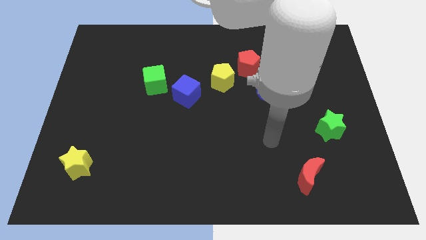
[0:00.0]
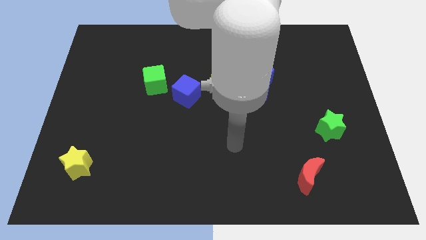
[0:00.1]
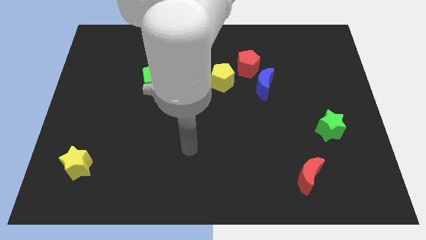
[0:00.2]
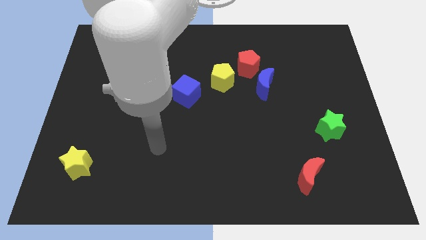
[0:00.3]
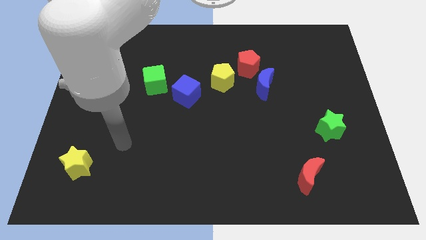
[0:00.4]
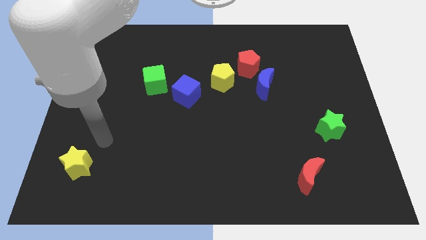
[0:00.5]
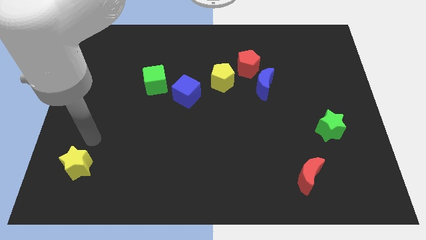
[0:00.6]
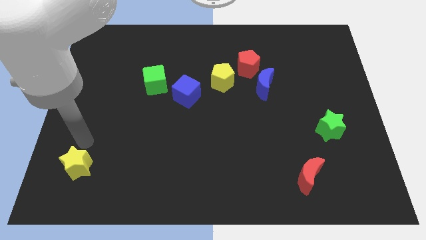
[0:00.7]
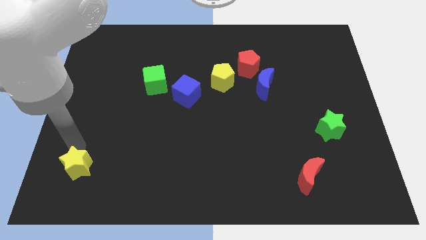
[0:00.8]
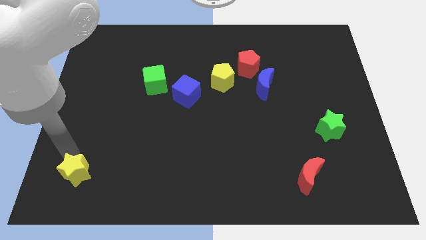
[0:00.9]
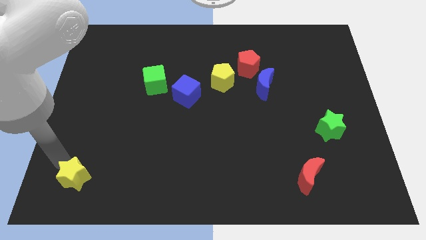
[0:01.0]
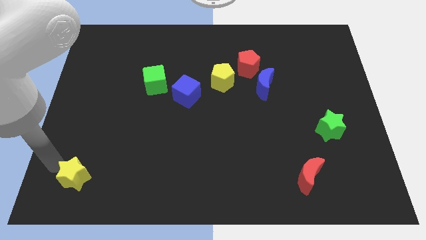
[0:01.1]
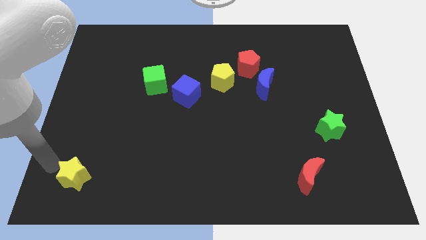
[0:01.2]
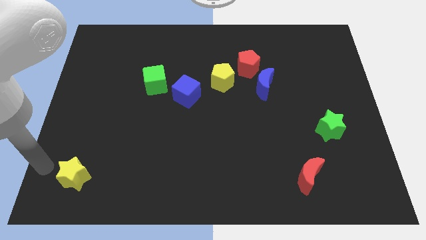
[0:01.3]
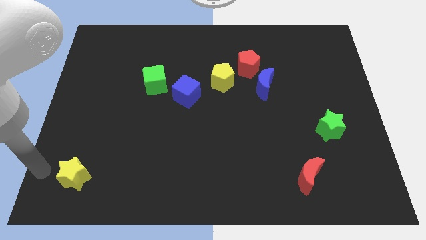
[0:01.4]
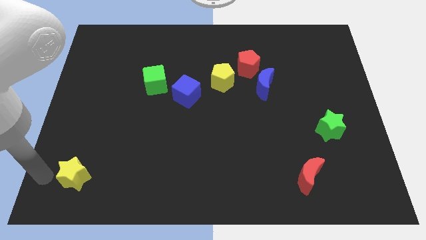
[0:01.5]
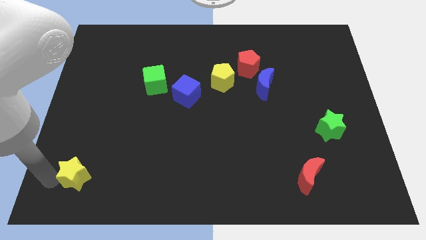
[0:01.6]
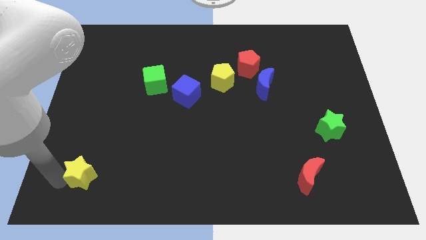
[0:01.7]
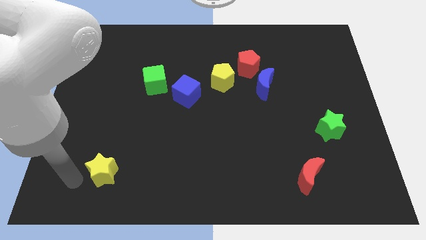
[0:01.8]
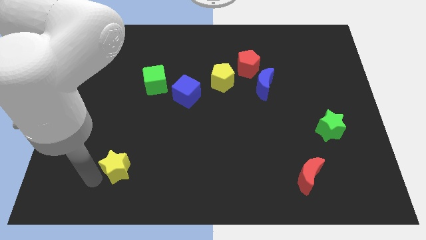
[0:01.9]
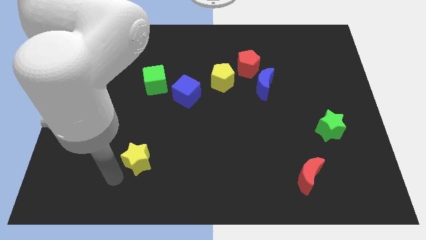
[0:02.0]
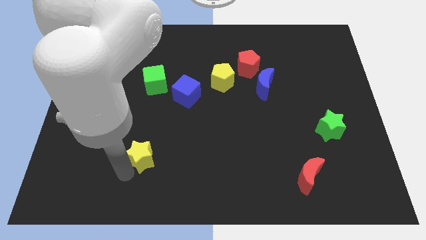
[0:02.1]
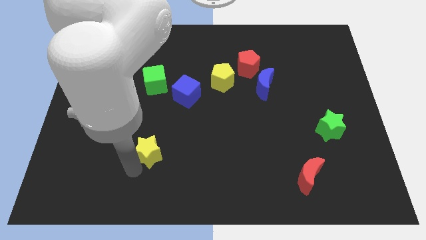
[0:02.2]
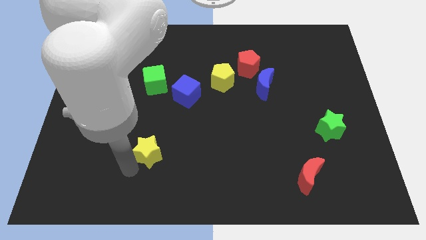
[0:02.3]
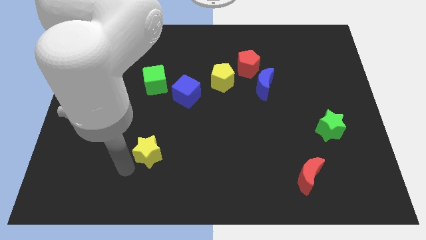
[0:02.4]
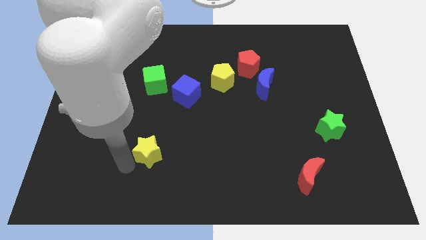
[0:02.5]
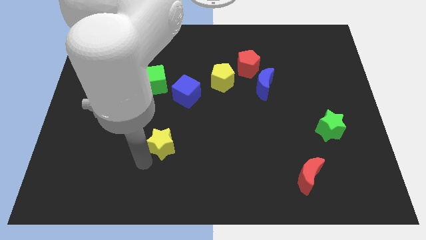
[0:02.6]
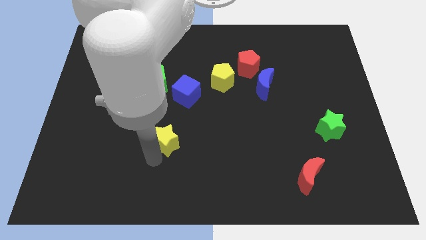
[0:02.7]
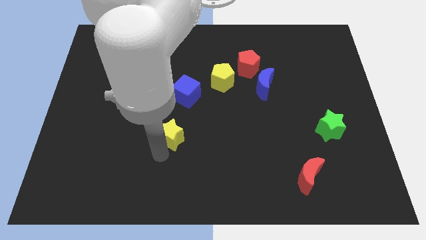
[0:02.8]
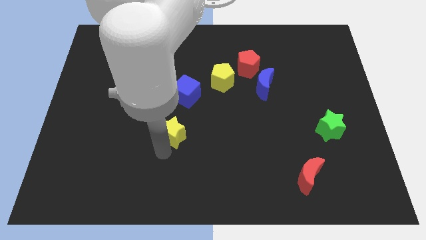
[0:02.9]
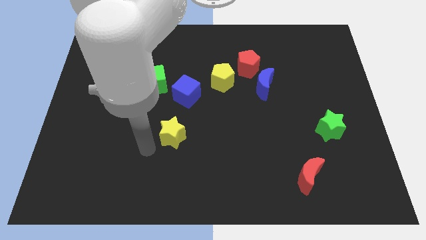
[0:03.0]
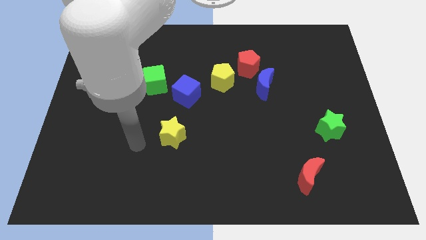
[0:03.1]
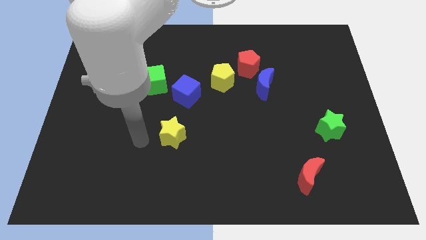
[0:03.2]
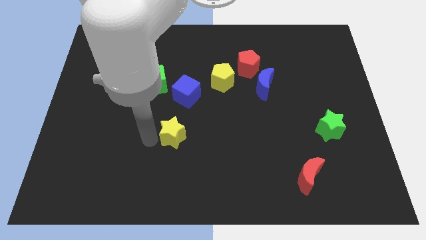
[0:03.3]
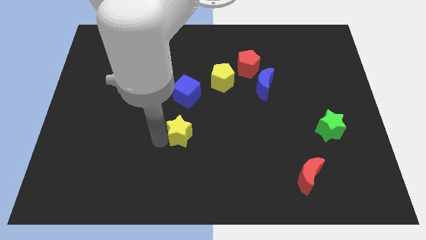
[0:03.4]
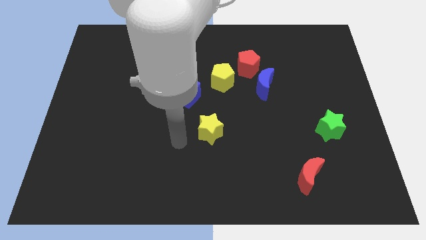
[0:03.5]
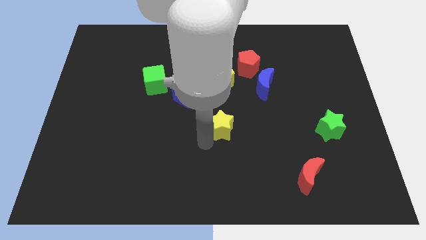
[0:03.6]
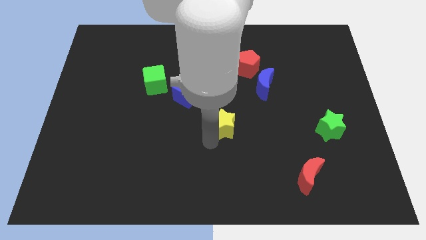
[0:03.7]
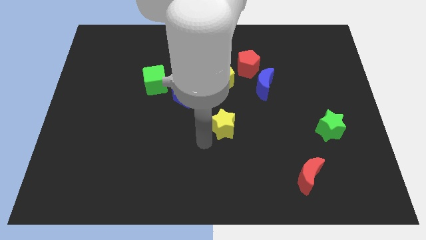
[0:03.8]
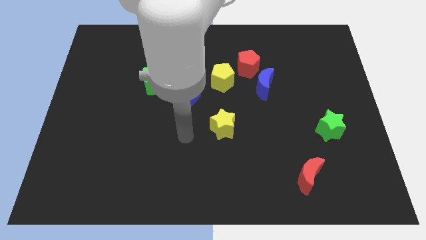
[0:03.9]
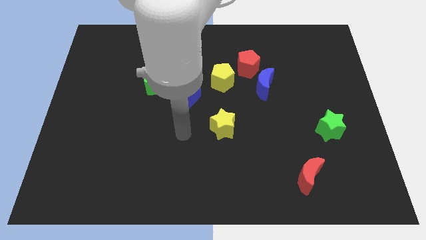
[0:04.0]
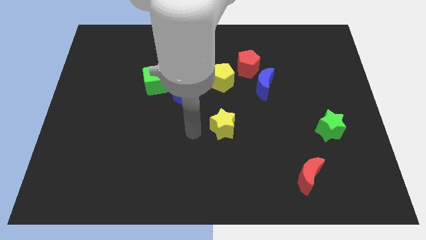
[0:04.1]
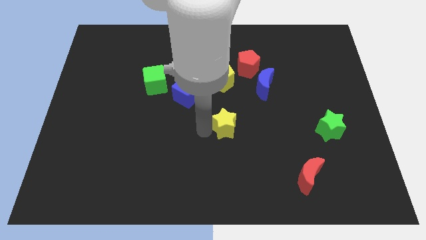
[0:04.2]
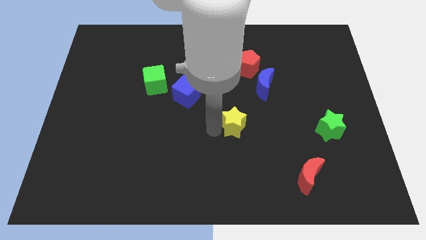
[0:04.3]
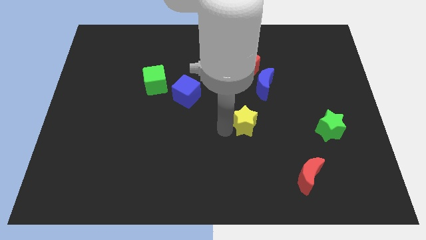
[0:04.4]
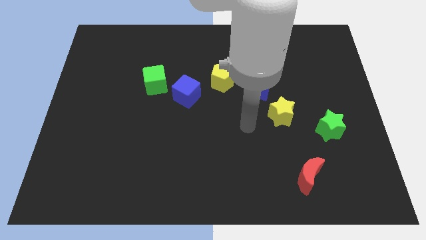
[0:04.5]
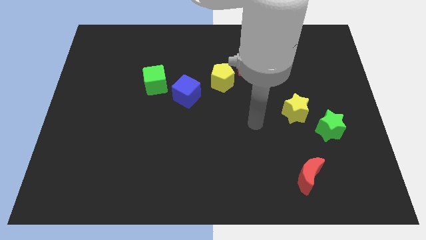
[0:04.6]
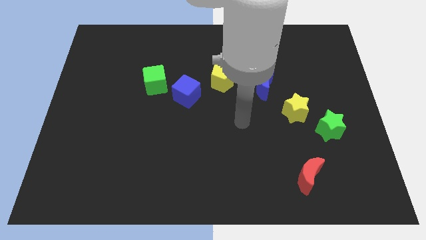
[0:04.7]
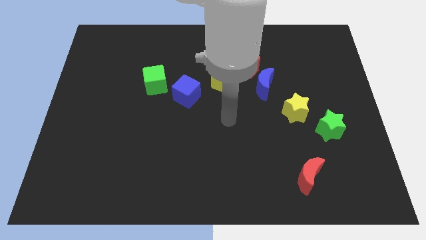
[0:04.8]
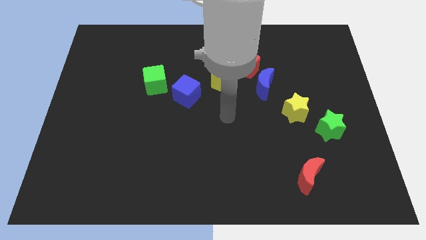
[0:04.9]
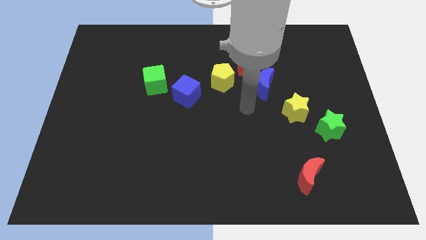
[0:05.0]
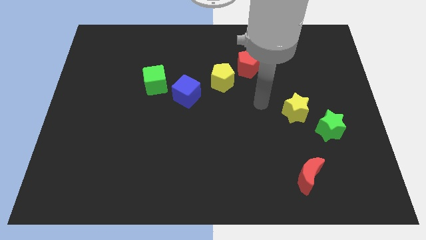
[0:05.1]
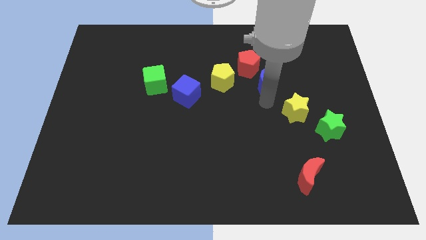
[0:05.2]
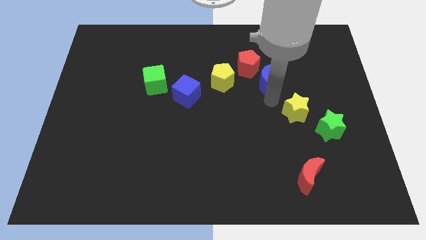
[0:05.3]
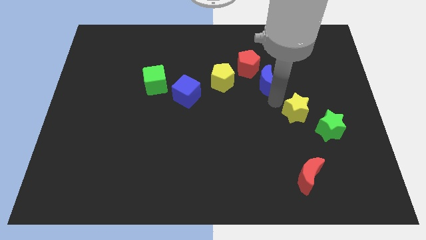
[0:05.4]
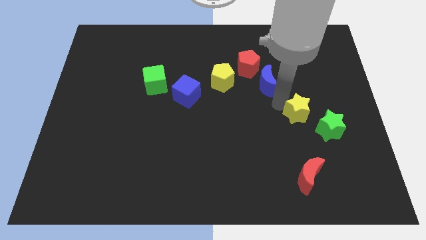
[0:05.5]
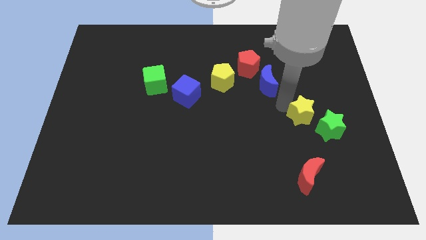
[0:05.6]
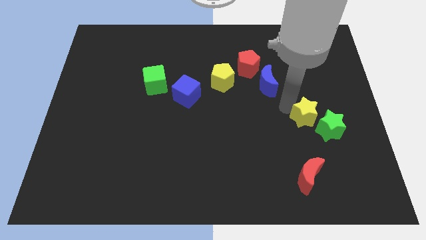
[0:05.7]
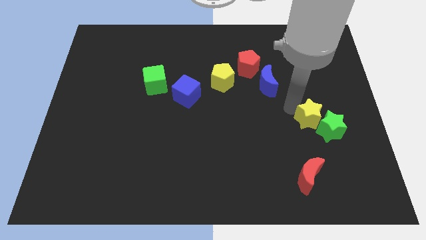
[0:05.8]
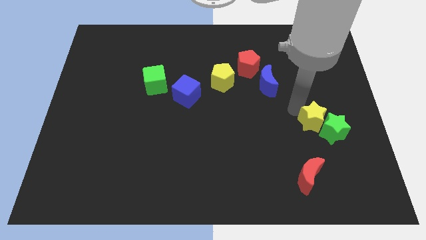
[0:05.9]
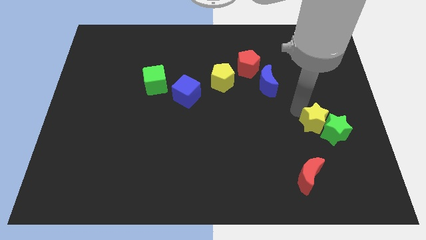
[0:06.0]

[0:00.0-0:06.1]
put the yellow star towards the green star

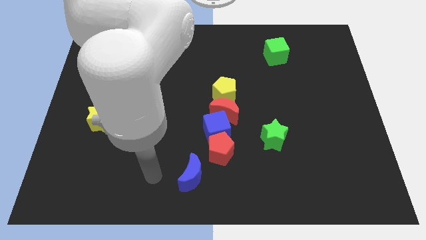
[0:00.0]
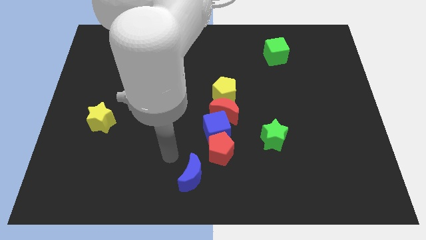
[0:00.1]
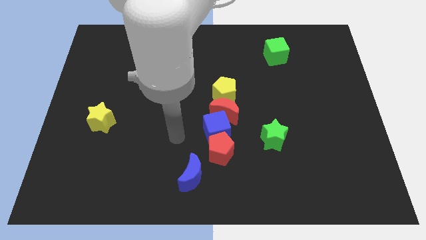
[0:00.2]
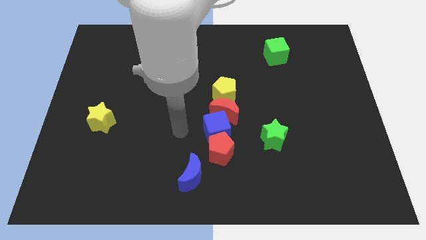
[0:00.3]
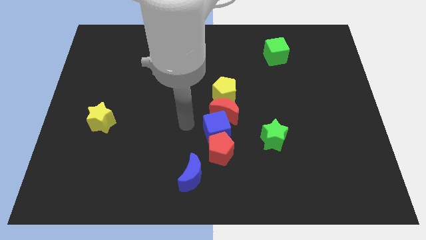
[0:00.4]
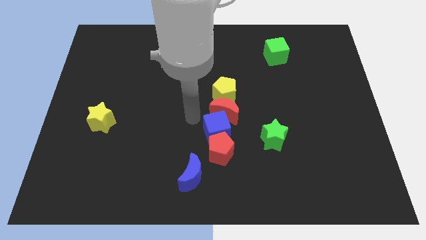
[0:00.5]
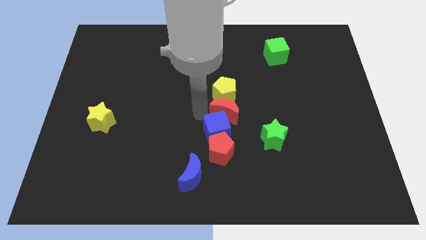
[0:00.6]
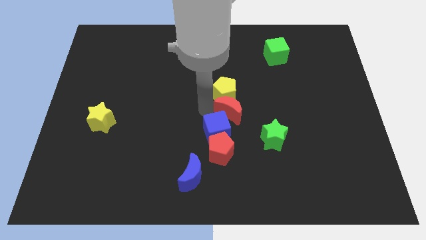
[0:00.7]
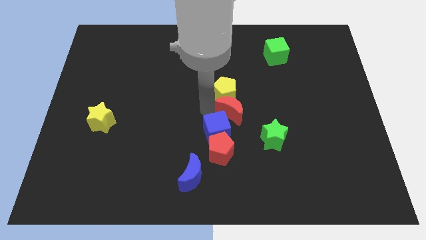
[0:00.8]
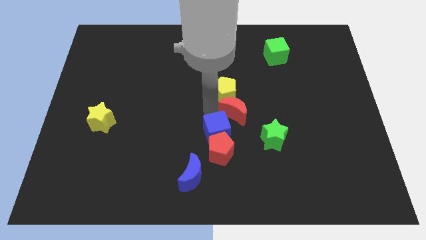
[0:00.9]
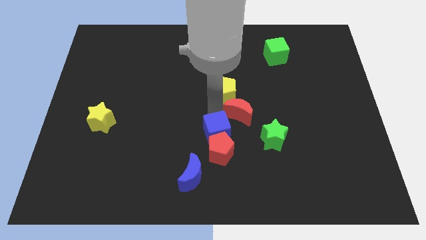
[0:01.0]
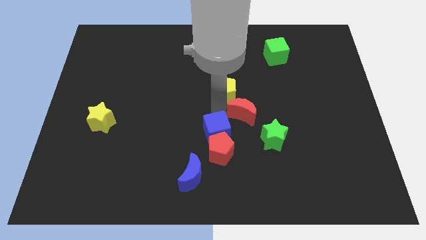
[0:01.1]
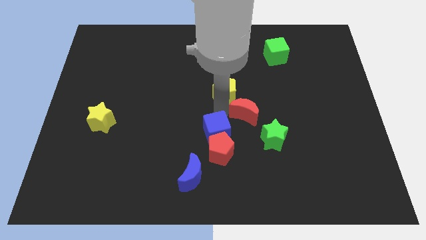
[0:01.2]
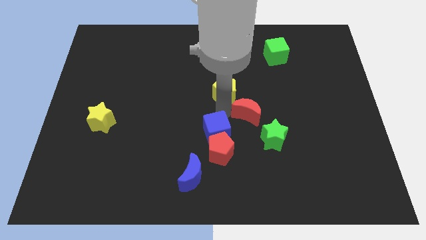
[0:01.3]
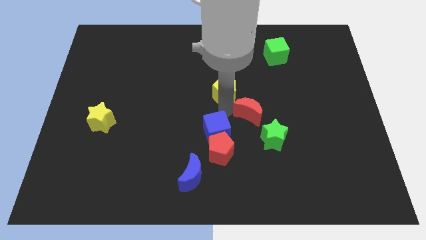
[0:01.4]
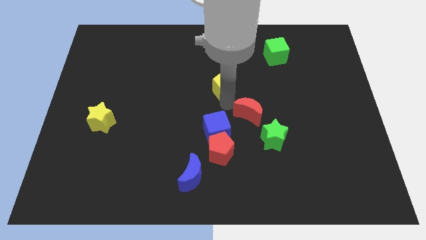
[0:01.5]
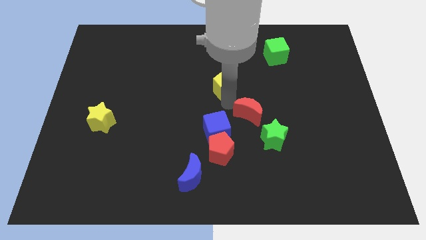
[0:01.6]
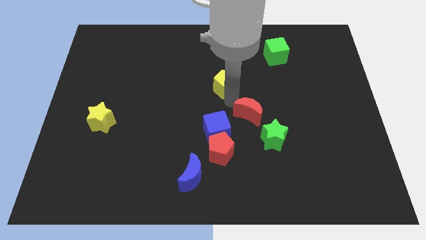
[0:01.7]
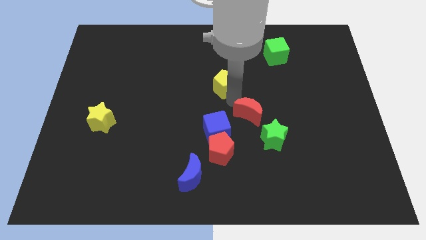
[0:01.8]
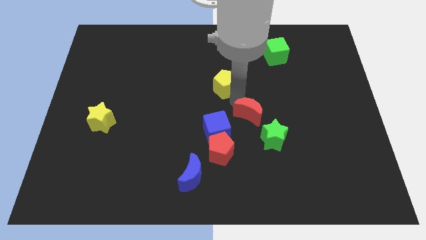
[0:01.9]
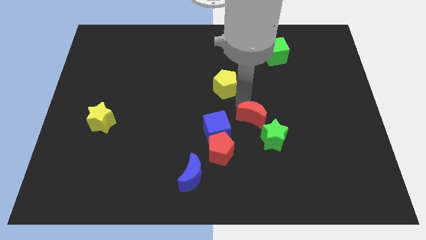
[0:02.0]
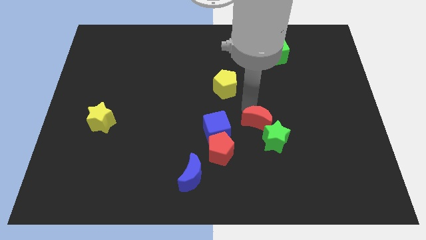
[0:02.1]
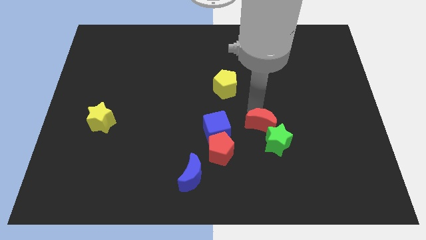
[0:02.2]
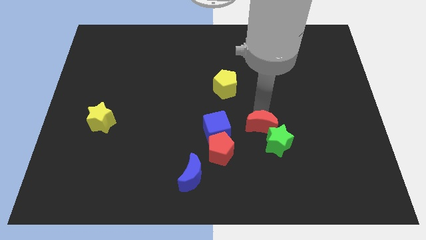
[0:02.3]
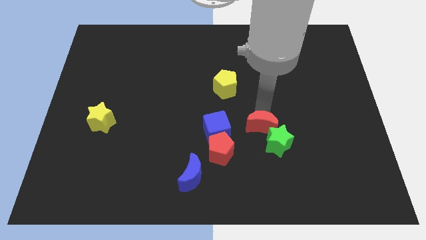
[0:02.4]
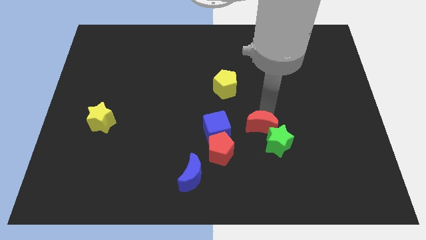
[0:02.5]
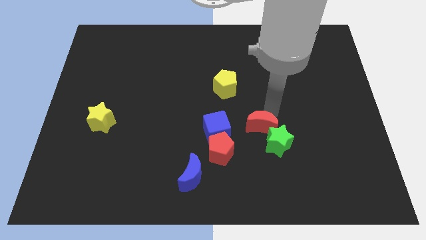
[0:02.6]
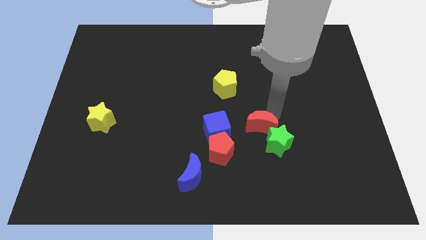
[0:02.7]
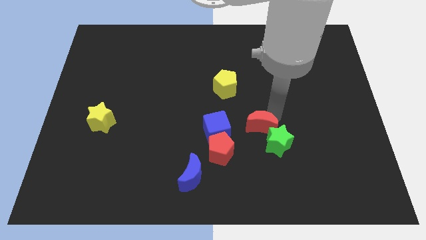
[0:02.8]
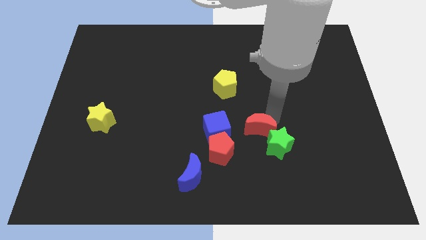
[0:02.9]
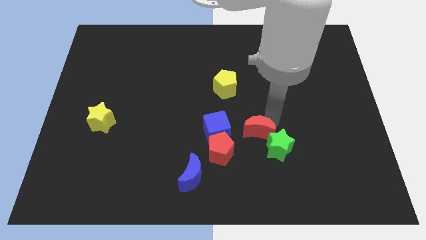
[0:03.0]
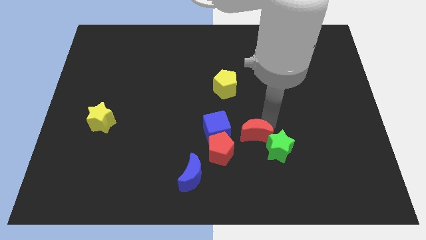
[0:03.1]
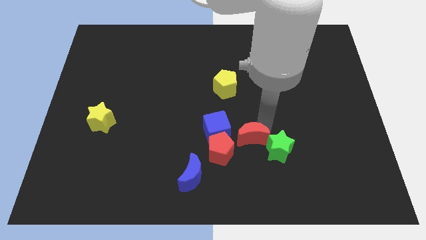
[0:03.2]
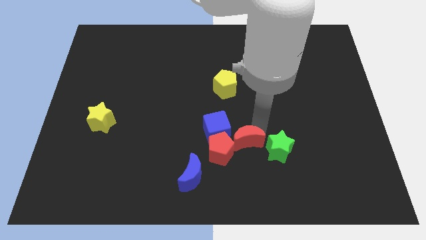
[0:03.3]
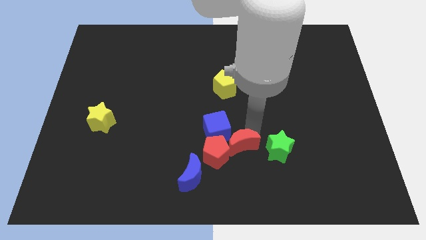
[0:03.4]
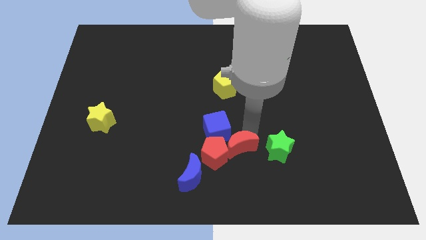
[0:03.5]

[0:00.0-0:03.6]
move the red moon close to the red pentagon
